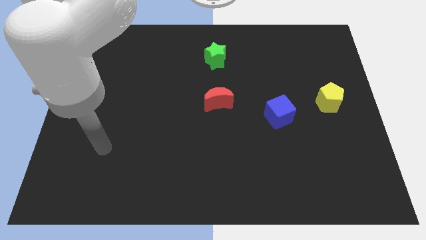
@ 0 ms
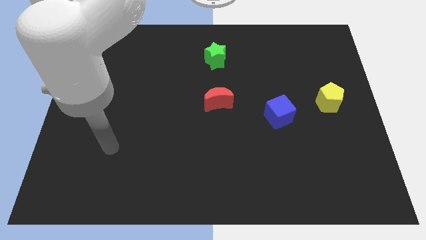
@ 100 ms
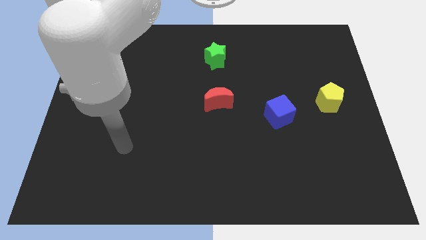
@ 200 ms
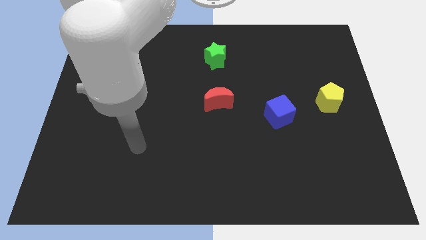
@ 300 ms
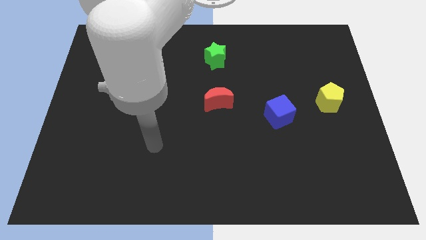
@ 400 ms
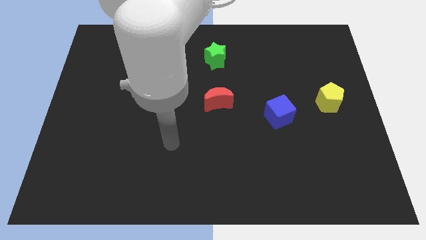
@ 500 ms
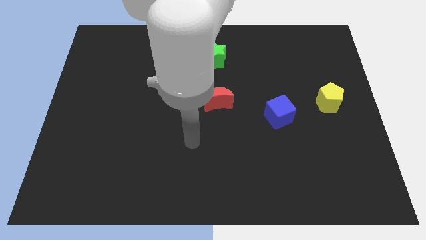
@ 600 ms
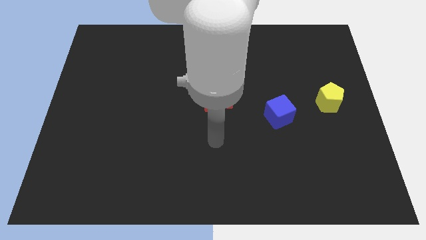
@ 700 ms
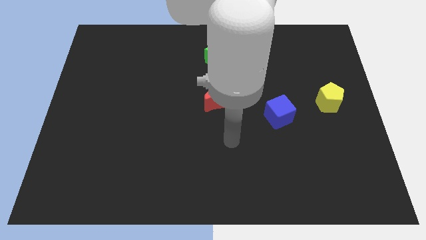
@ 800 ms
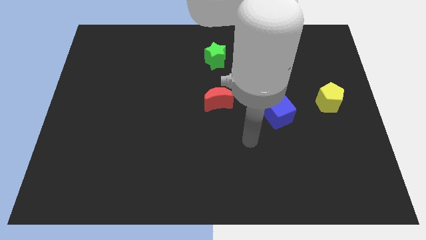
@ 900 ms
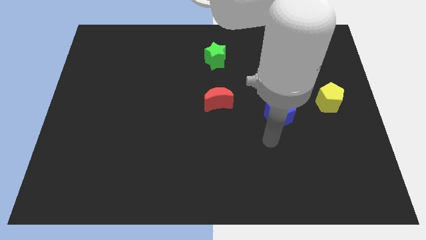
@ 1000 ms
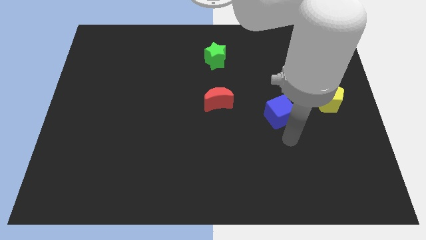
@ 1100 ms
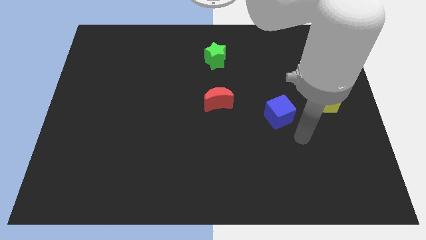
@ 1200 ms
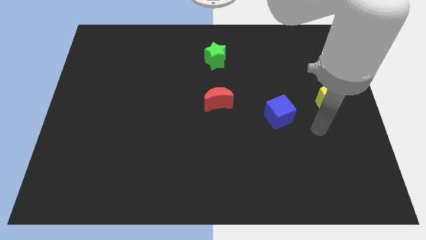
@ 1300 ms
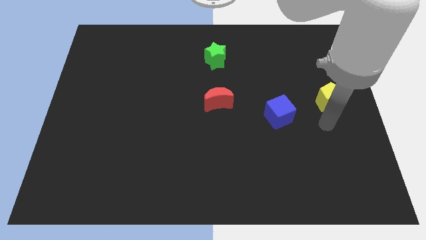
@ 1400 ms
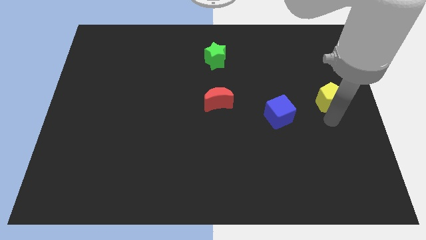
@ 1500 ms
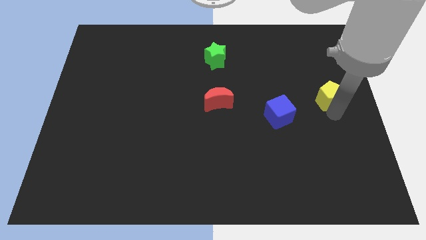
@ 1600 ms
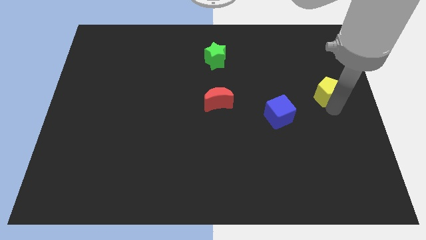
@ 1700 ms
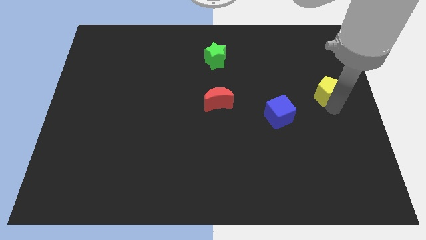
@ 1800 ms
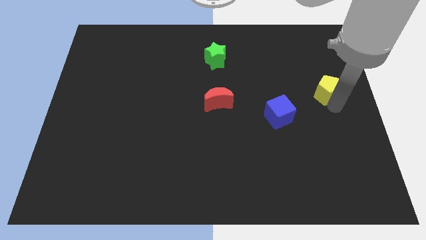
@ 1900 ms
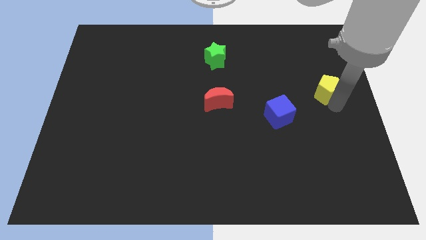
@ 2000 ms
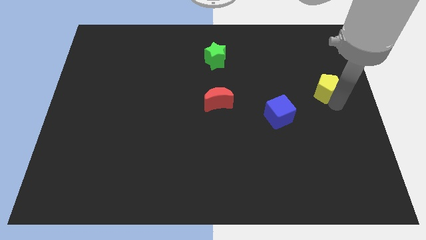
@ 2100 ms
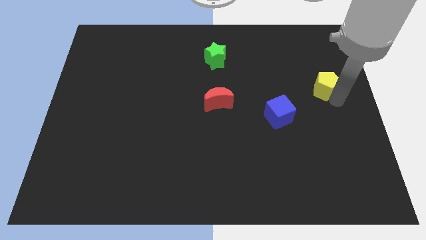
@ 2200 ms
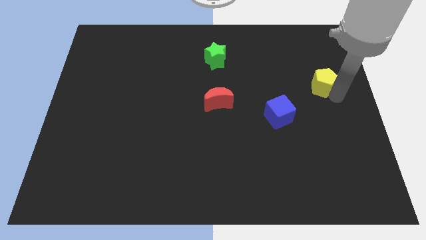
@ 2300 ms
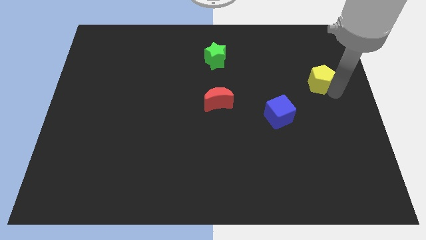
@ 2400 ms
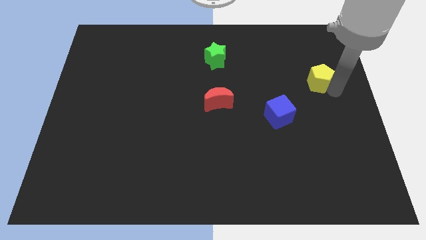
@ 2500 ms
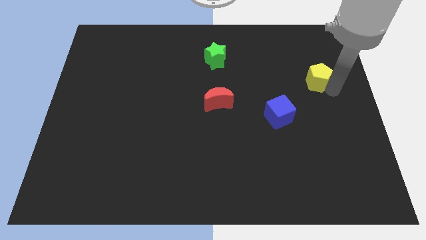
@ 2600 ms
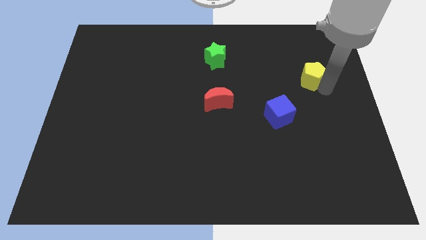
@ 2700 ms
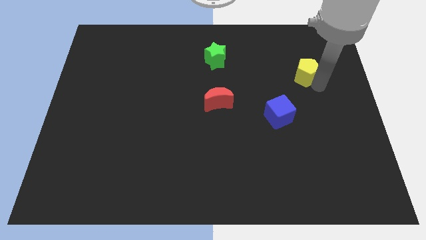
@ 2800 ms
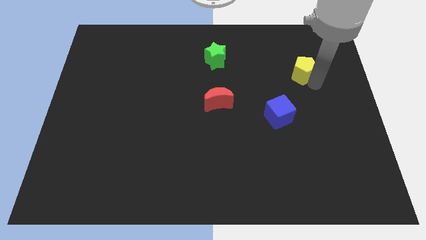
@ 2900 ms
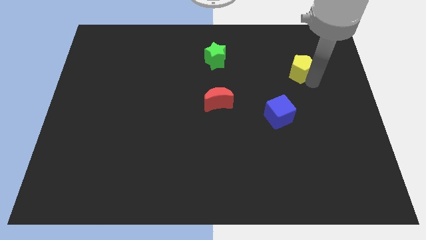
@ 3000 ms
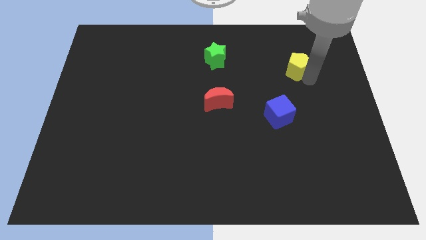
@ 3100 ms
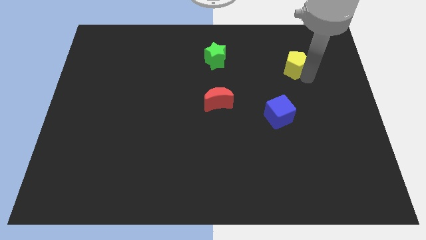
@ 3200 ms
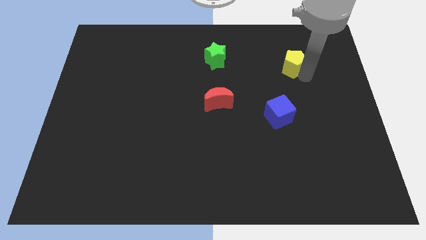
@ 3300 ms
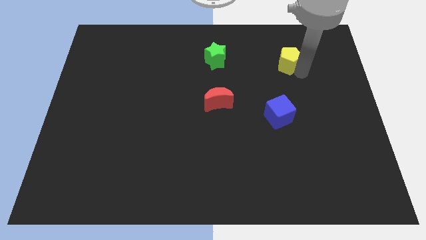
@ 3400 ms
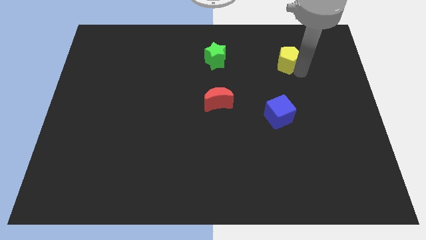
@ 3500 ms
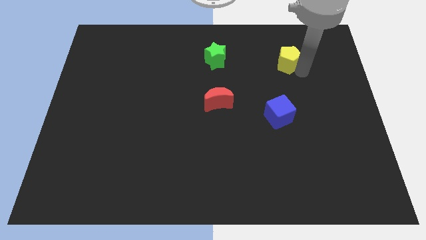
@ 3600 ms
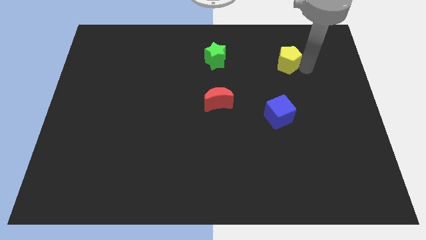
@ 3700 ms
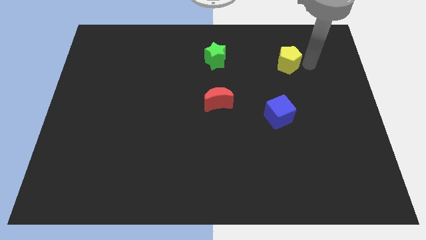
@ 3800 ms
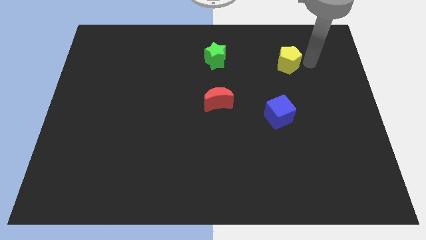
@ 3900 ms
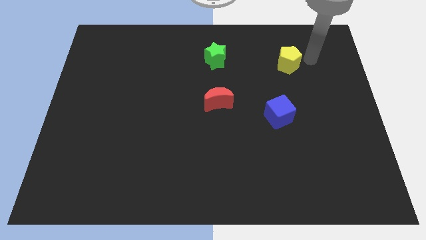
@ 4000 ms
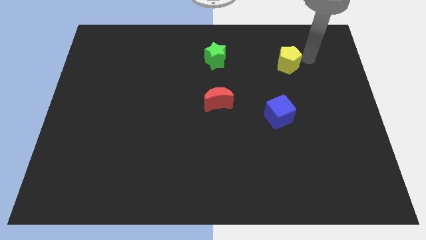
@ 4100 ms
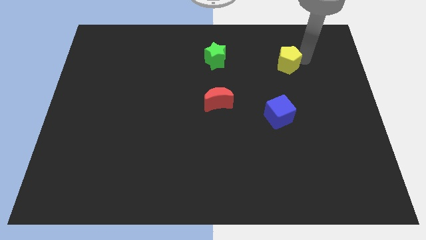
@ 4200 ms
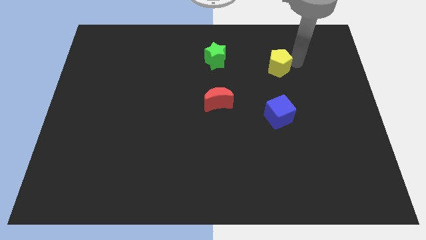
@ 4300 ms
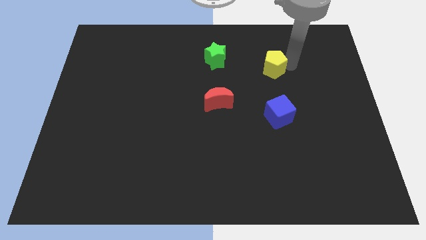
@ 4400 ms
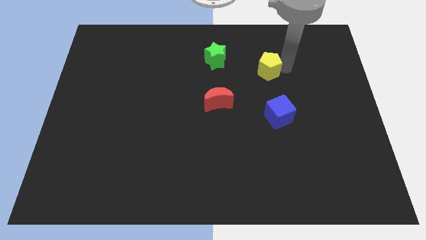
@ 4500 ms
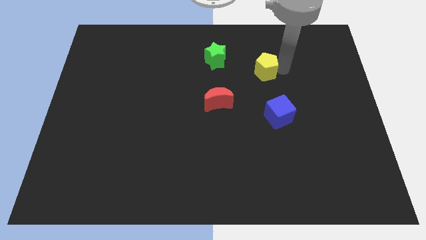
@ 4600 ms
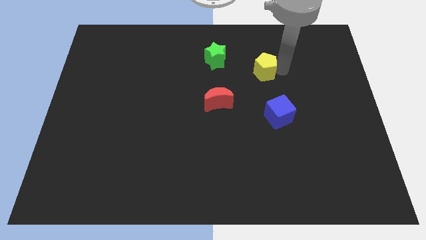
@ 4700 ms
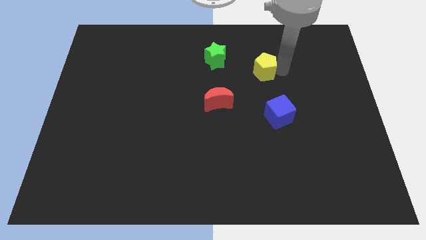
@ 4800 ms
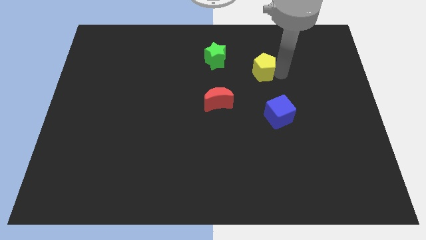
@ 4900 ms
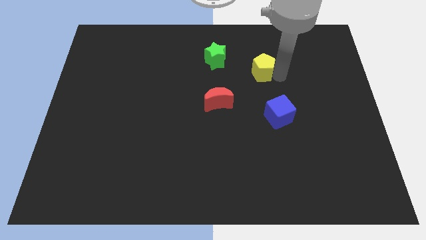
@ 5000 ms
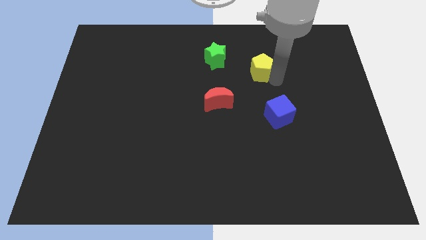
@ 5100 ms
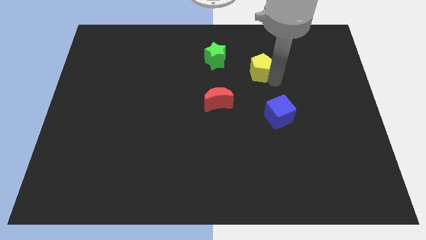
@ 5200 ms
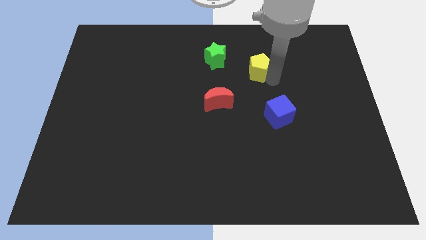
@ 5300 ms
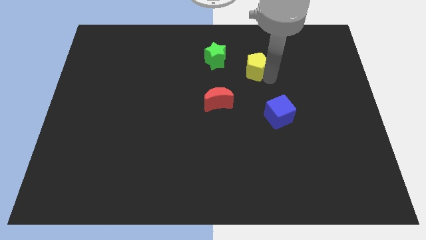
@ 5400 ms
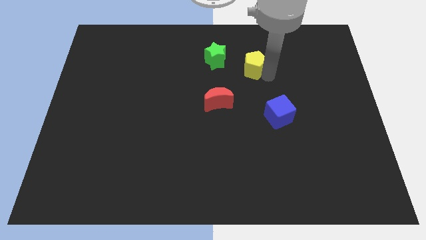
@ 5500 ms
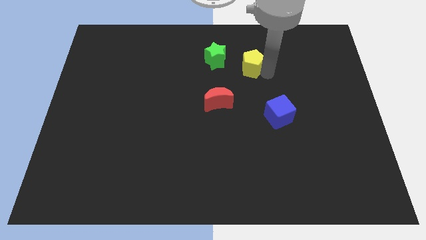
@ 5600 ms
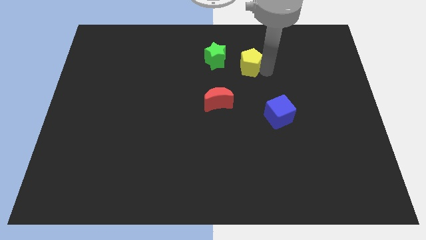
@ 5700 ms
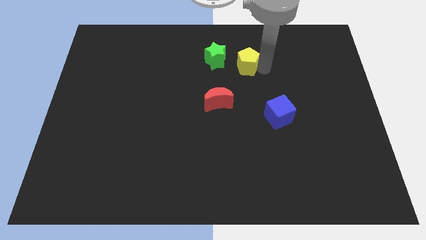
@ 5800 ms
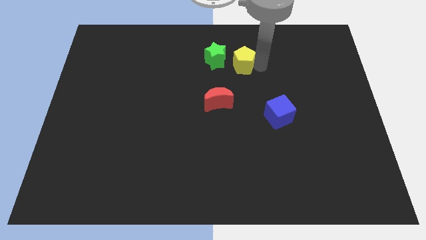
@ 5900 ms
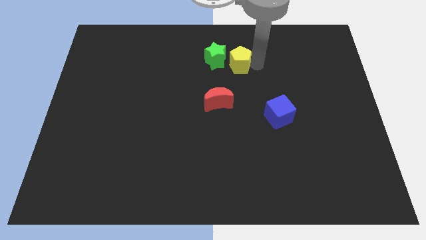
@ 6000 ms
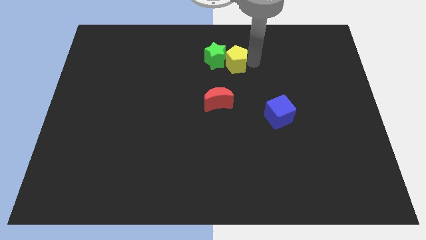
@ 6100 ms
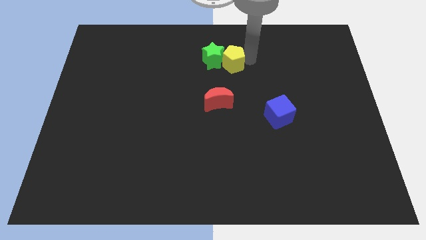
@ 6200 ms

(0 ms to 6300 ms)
slide the pentagon towards the green star

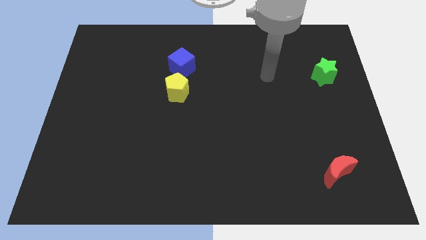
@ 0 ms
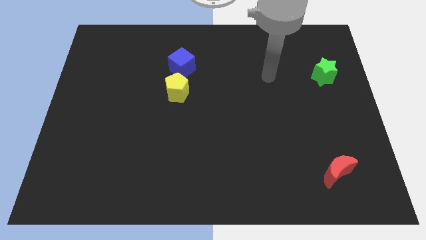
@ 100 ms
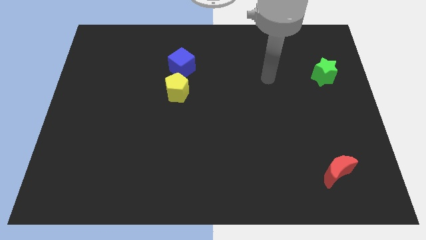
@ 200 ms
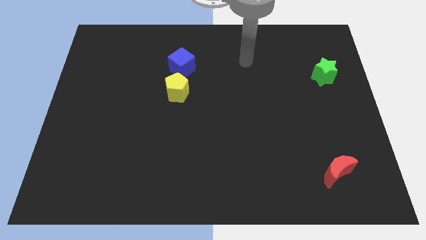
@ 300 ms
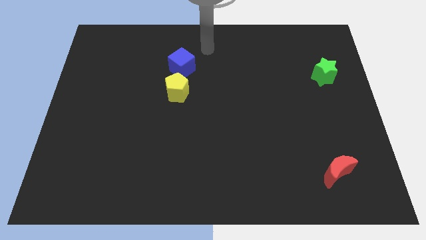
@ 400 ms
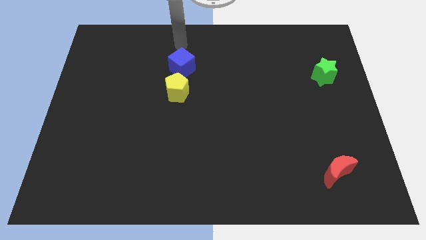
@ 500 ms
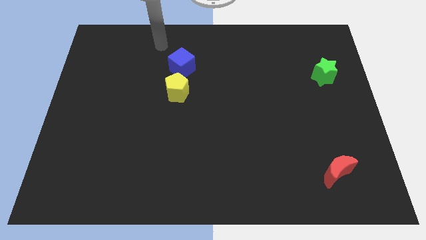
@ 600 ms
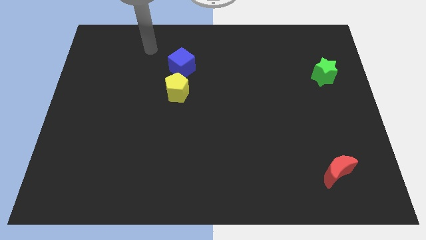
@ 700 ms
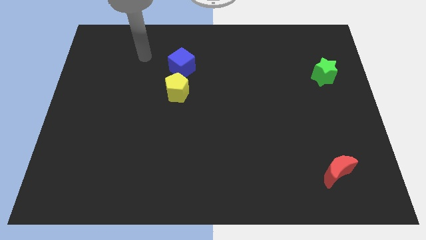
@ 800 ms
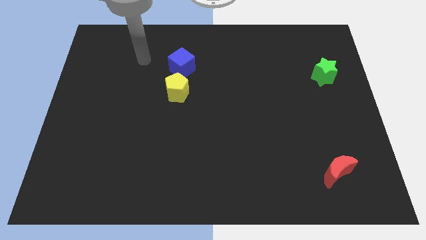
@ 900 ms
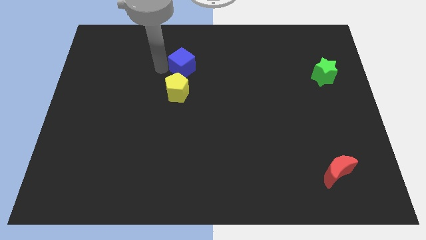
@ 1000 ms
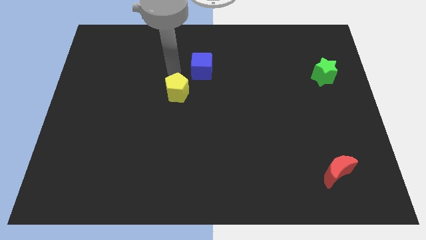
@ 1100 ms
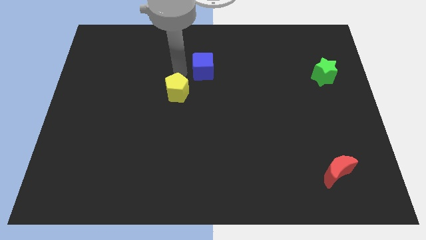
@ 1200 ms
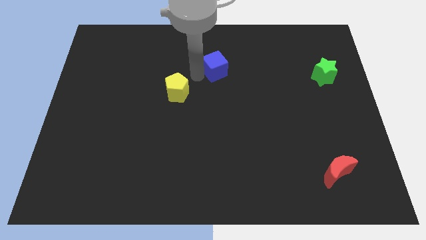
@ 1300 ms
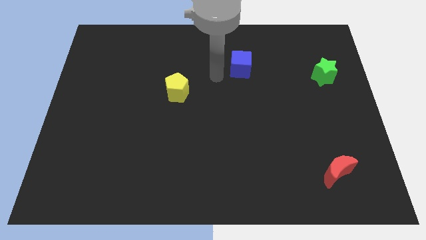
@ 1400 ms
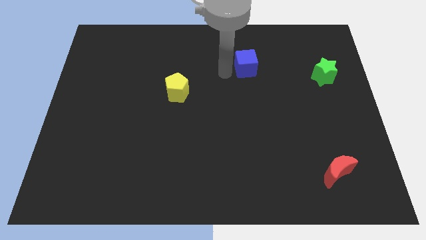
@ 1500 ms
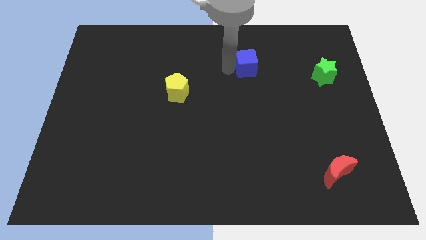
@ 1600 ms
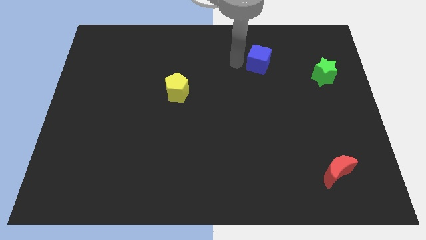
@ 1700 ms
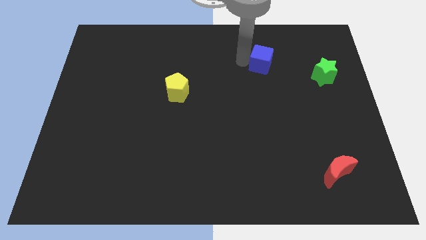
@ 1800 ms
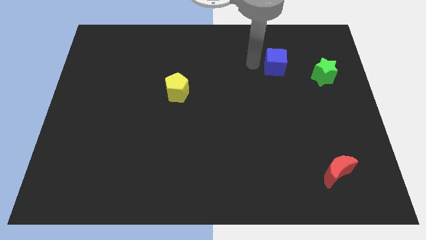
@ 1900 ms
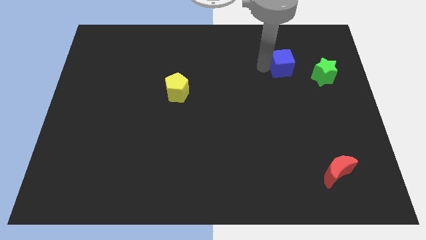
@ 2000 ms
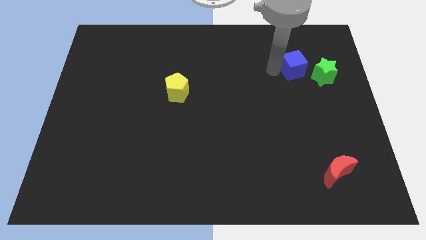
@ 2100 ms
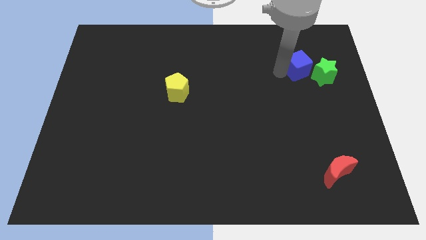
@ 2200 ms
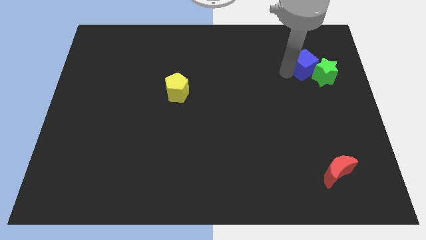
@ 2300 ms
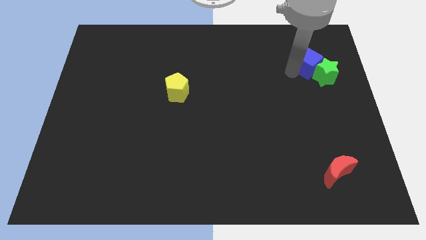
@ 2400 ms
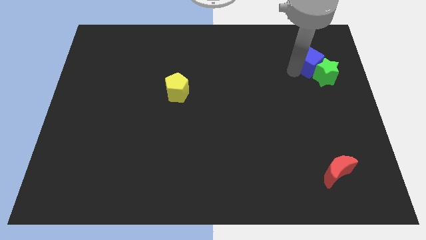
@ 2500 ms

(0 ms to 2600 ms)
slide the blue cube close to the green block
